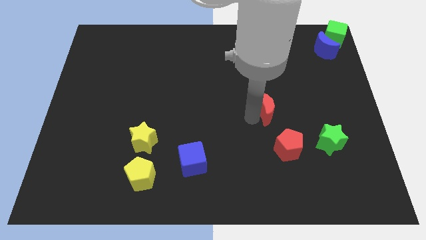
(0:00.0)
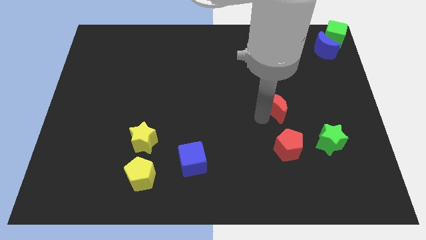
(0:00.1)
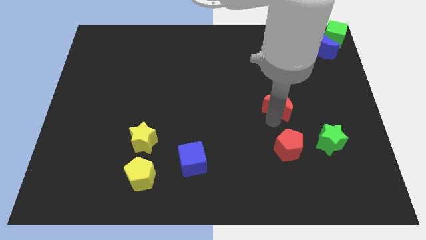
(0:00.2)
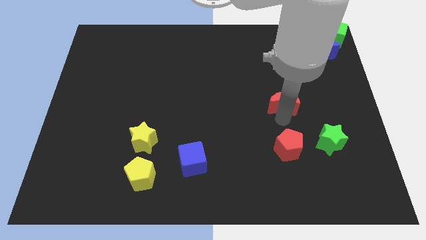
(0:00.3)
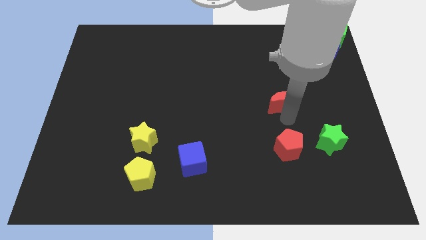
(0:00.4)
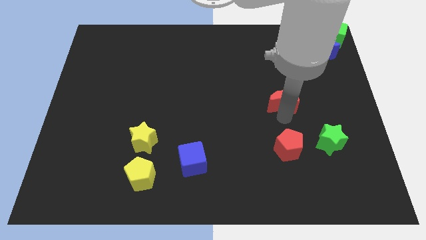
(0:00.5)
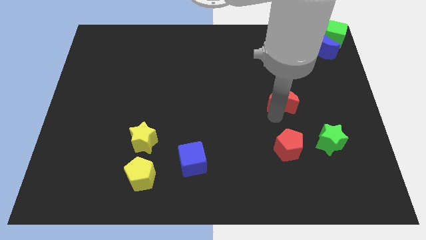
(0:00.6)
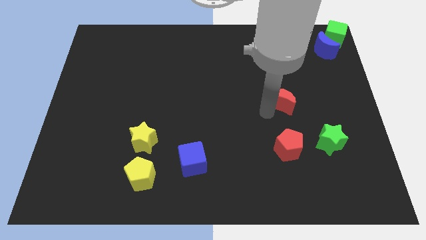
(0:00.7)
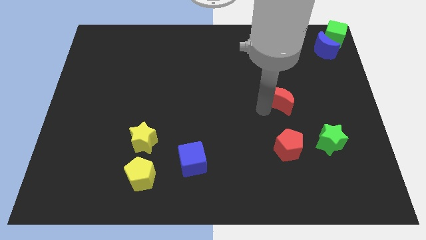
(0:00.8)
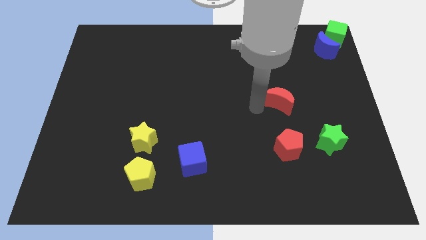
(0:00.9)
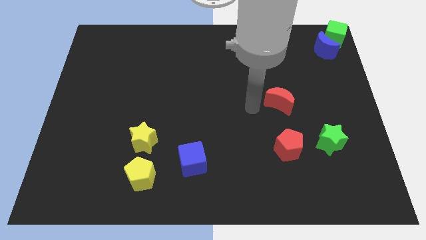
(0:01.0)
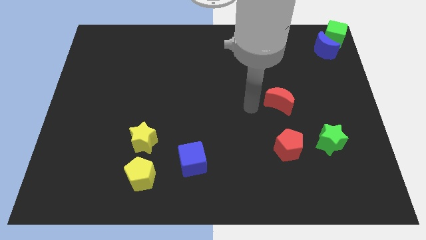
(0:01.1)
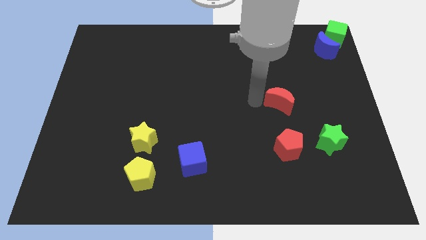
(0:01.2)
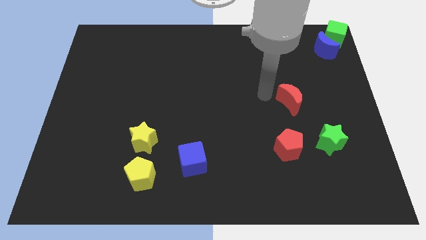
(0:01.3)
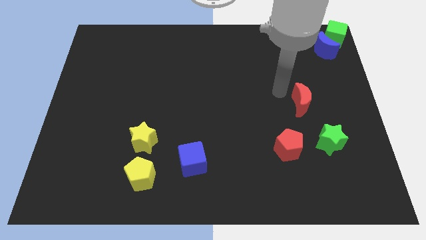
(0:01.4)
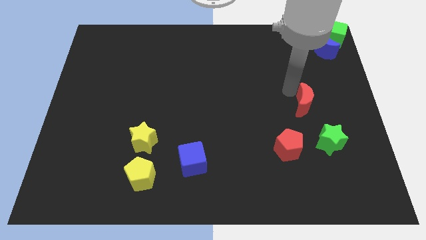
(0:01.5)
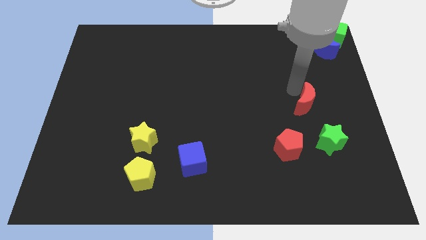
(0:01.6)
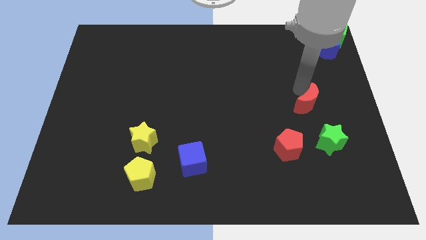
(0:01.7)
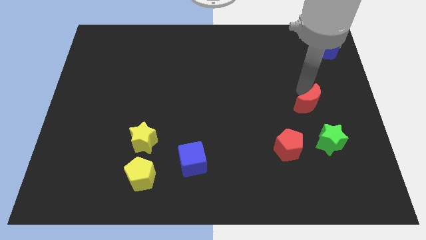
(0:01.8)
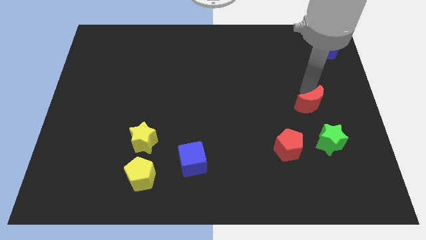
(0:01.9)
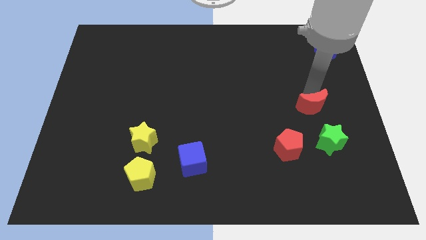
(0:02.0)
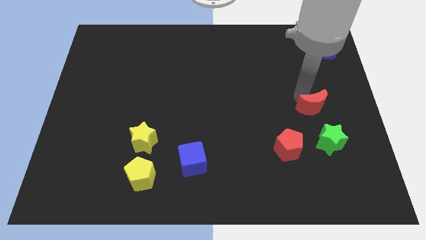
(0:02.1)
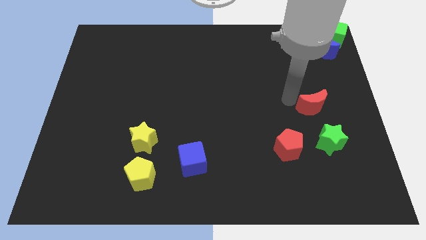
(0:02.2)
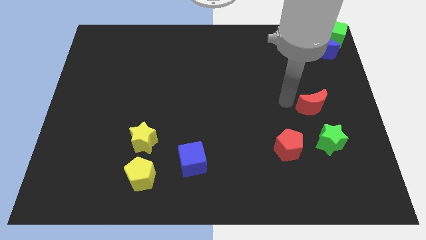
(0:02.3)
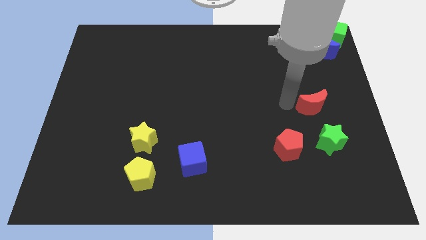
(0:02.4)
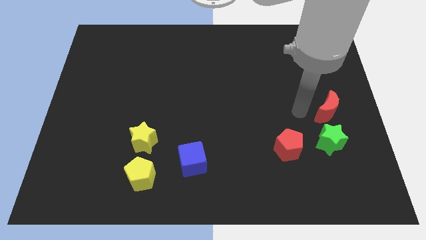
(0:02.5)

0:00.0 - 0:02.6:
move the red moon on top of green star

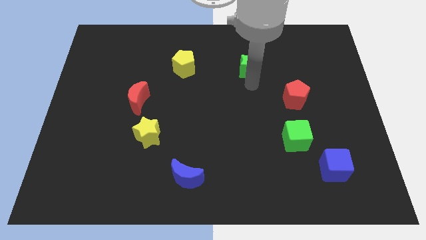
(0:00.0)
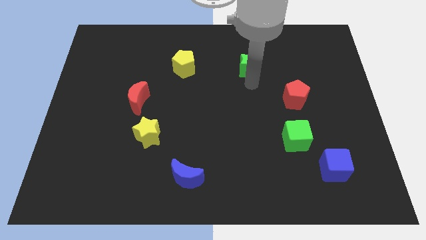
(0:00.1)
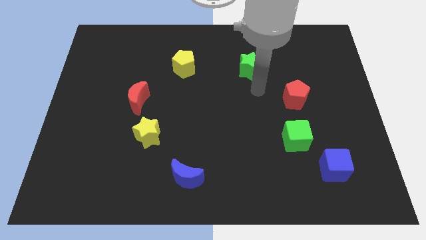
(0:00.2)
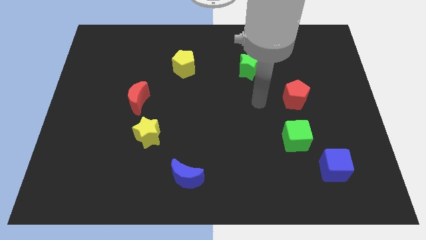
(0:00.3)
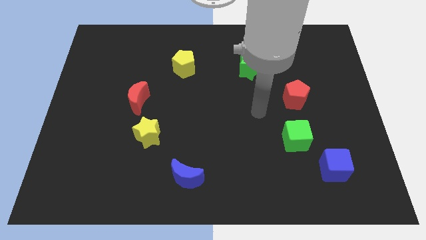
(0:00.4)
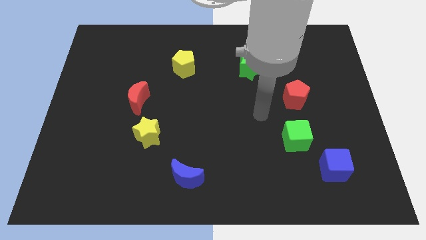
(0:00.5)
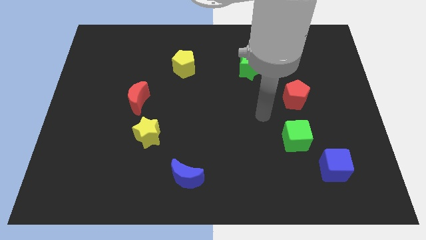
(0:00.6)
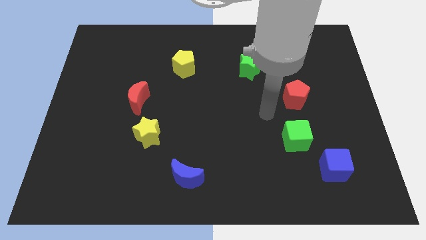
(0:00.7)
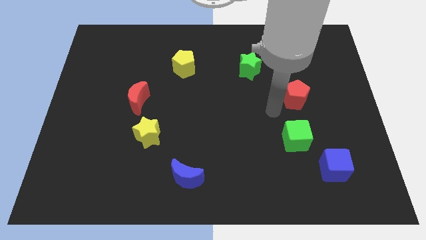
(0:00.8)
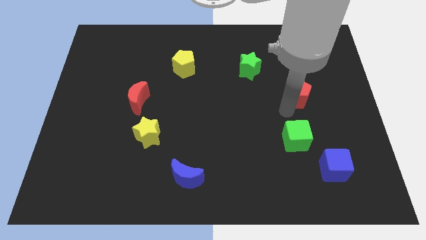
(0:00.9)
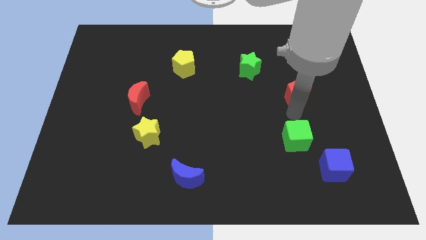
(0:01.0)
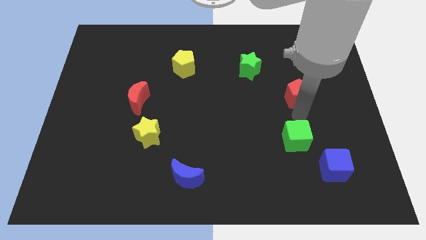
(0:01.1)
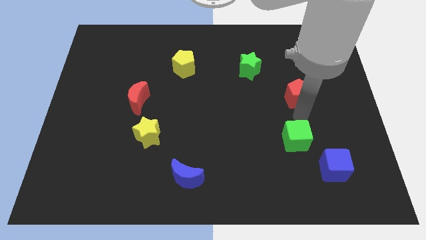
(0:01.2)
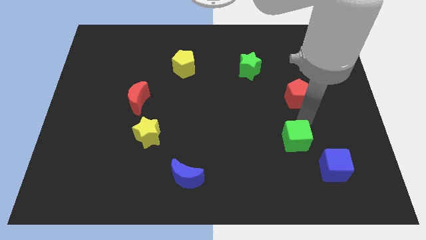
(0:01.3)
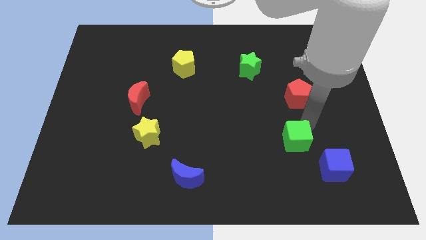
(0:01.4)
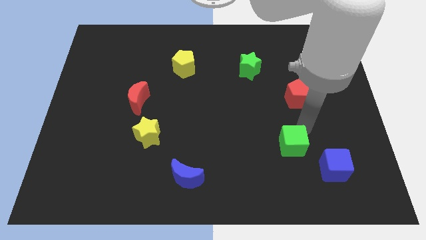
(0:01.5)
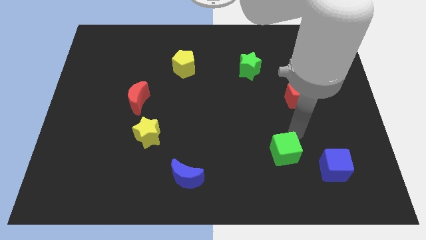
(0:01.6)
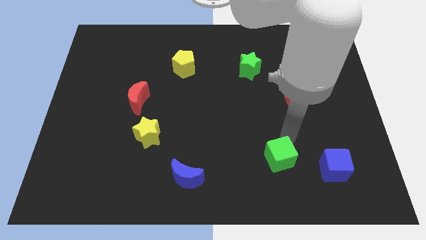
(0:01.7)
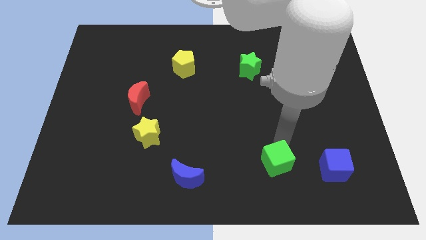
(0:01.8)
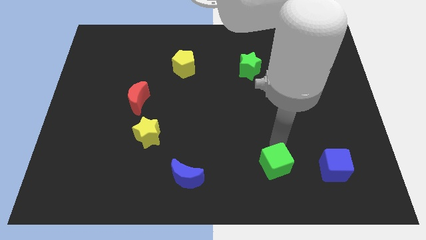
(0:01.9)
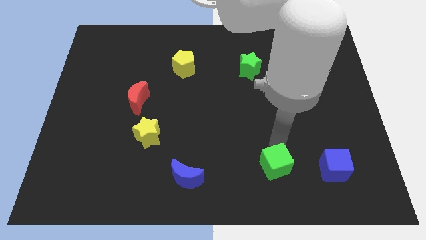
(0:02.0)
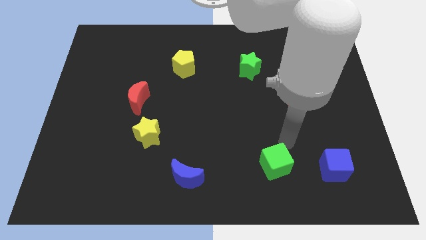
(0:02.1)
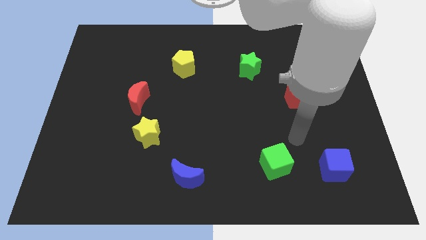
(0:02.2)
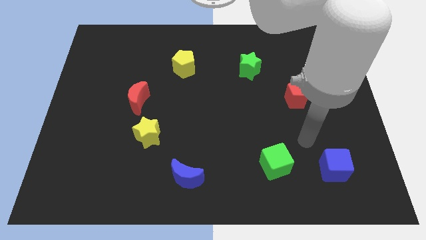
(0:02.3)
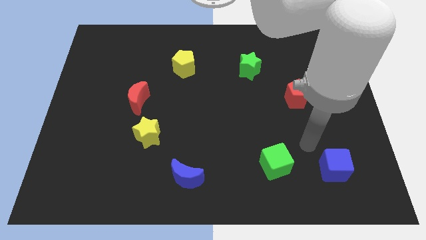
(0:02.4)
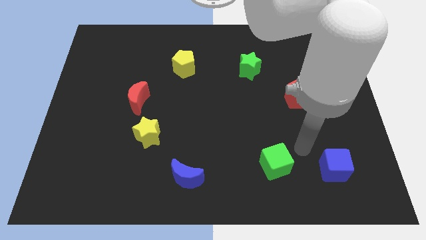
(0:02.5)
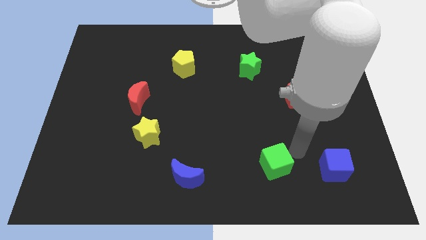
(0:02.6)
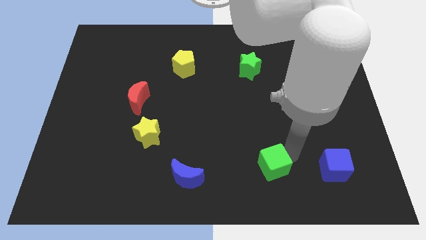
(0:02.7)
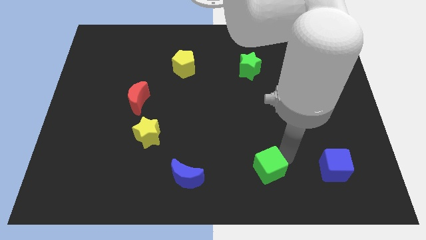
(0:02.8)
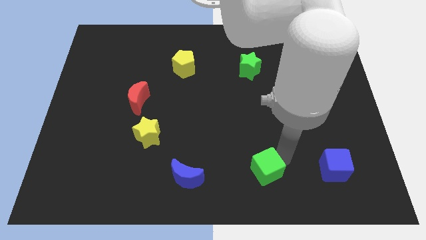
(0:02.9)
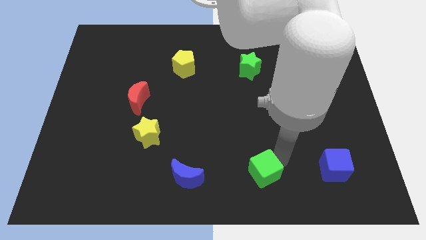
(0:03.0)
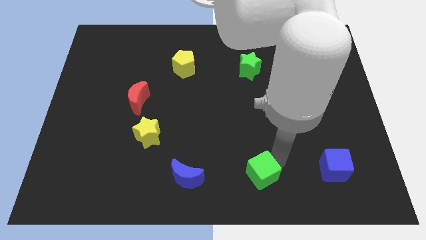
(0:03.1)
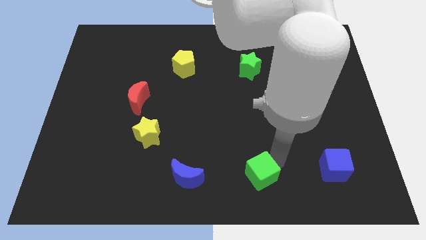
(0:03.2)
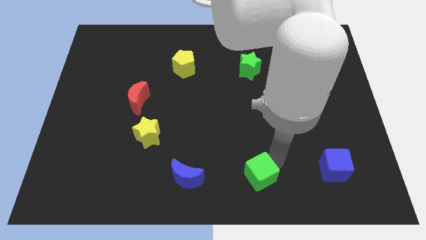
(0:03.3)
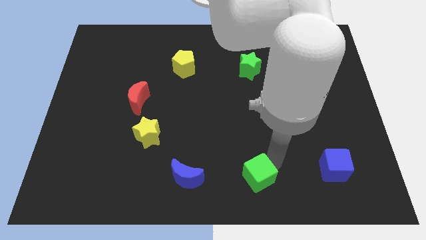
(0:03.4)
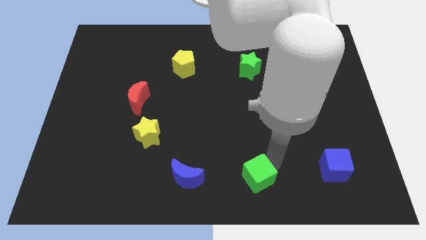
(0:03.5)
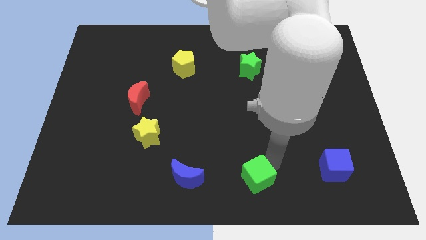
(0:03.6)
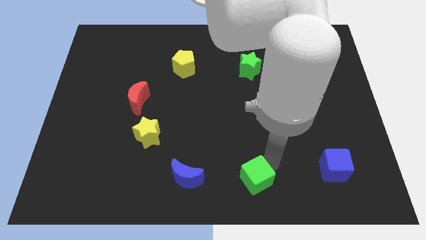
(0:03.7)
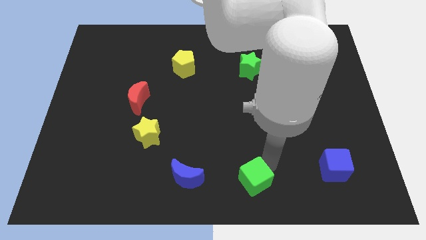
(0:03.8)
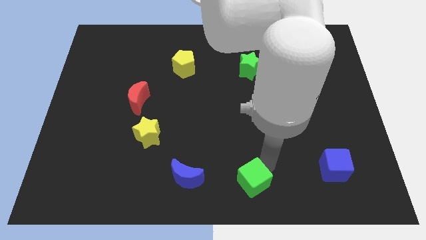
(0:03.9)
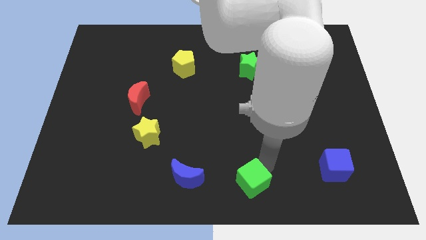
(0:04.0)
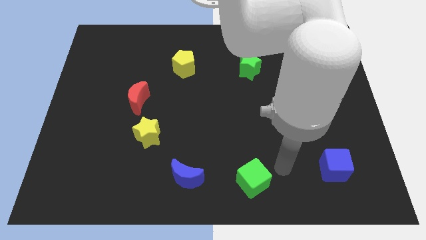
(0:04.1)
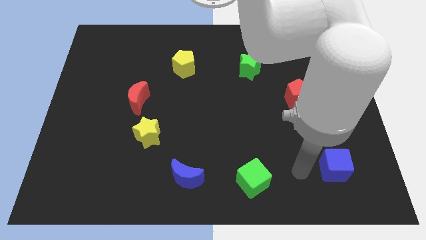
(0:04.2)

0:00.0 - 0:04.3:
place the green cube to the right of the blue moon

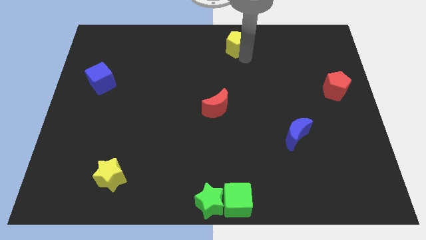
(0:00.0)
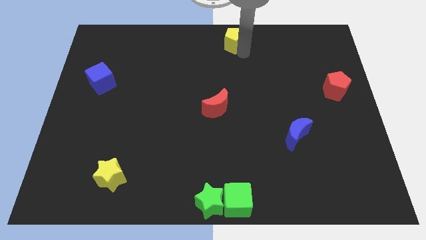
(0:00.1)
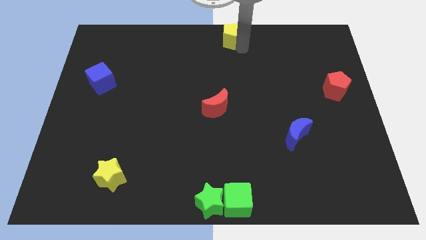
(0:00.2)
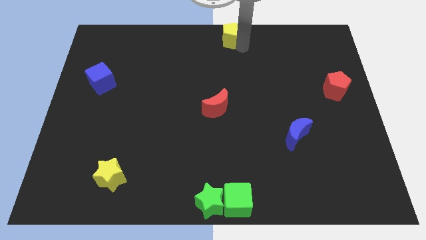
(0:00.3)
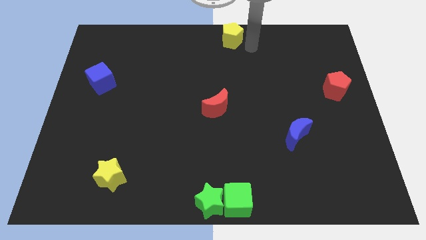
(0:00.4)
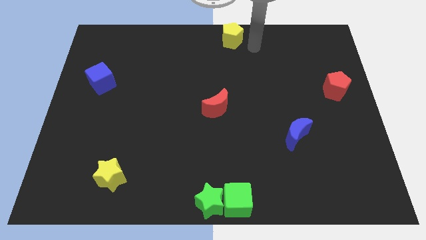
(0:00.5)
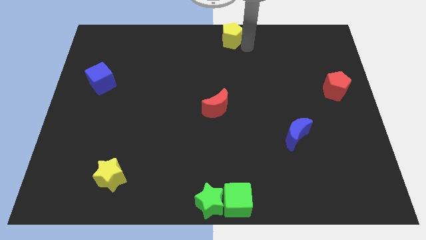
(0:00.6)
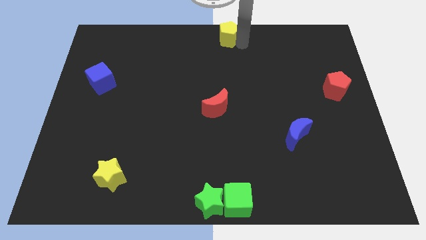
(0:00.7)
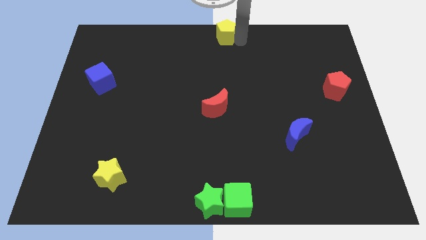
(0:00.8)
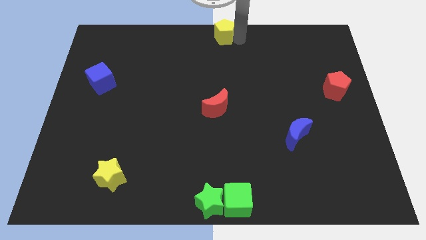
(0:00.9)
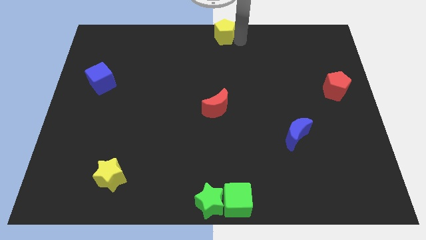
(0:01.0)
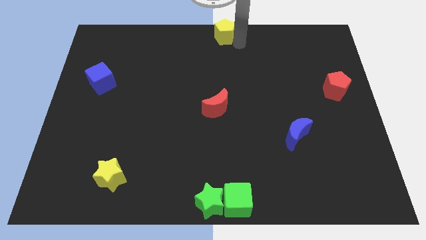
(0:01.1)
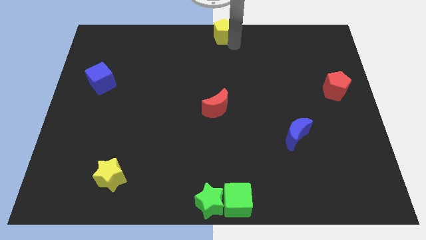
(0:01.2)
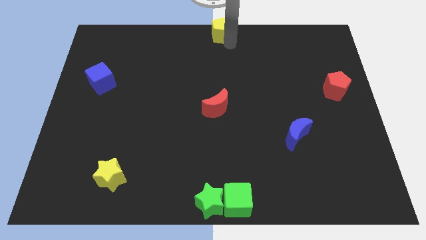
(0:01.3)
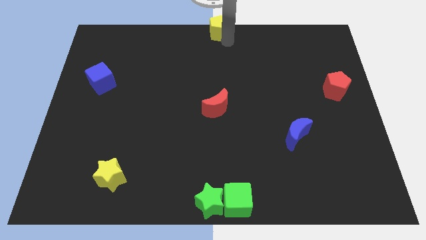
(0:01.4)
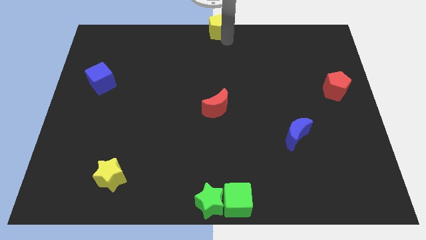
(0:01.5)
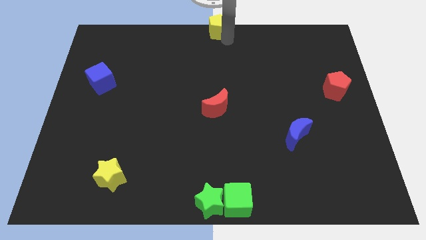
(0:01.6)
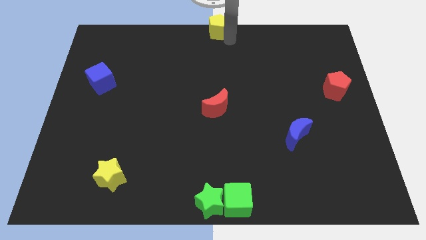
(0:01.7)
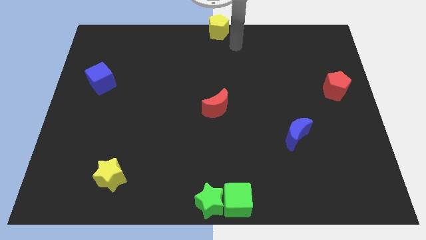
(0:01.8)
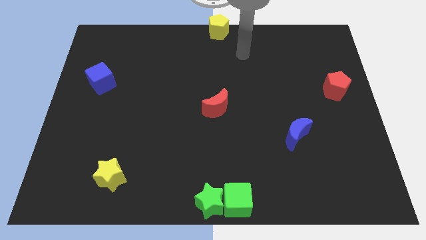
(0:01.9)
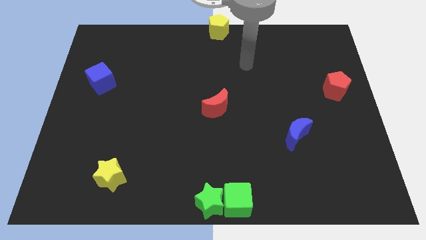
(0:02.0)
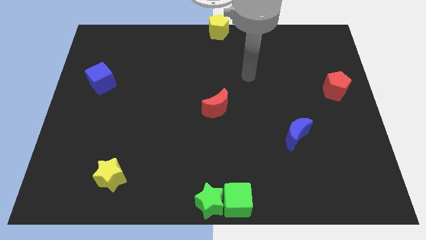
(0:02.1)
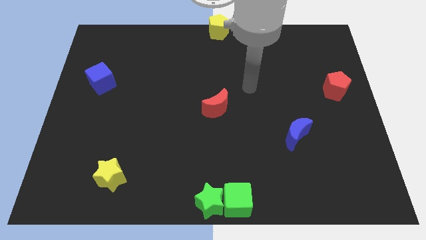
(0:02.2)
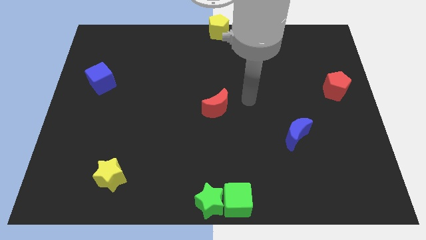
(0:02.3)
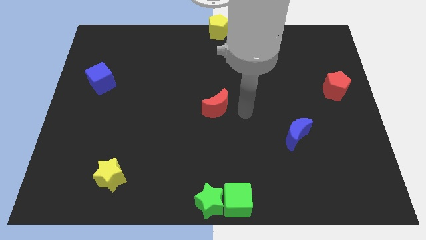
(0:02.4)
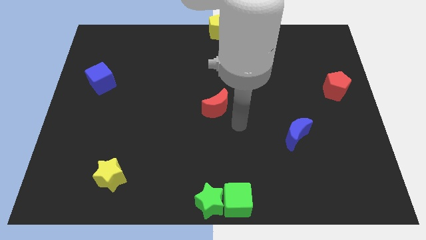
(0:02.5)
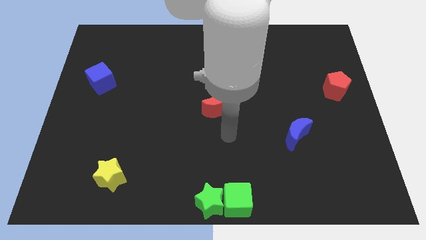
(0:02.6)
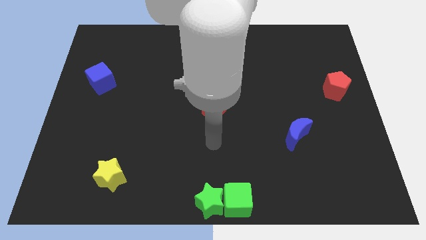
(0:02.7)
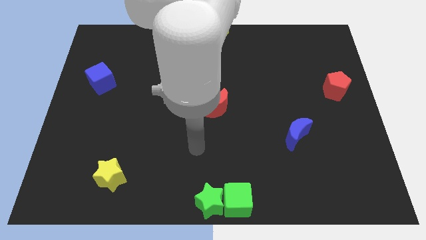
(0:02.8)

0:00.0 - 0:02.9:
place the yellow pentagon above the red moon
